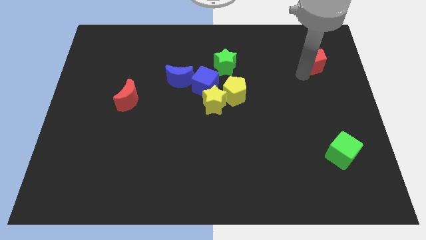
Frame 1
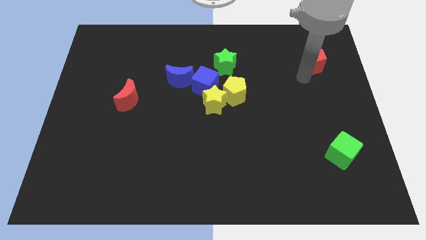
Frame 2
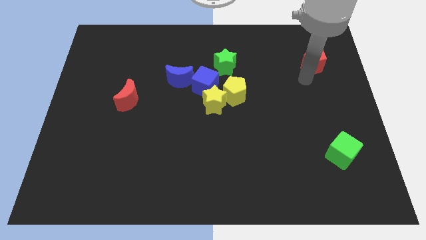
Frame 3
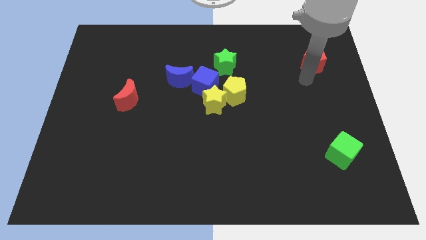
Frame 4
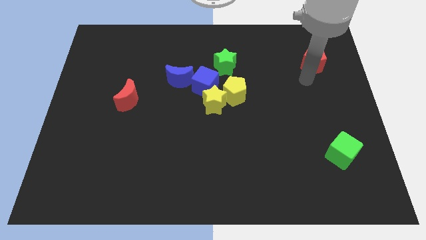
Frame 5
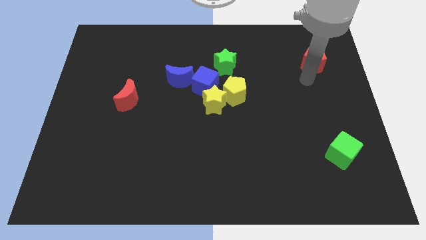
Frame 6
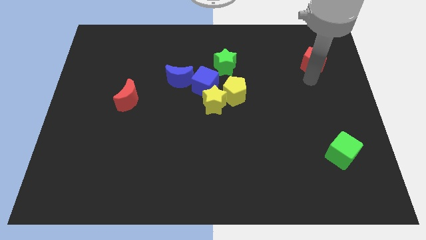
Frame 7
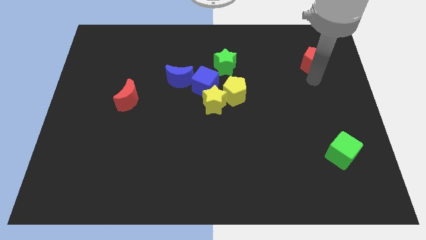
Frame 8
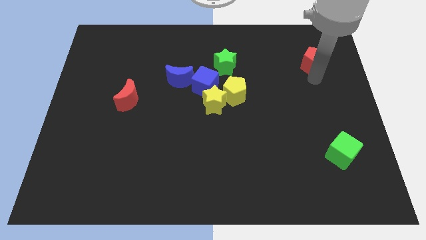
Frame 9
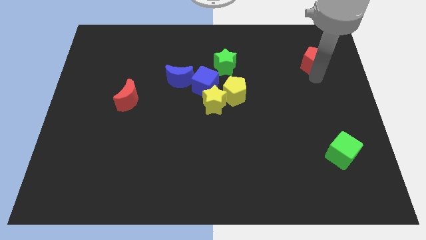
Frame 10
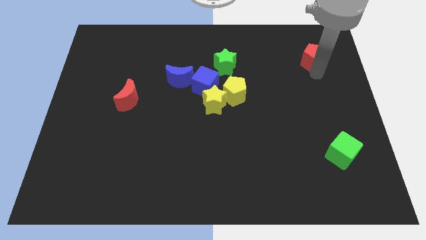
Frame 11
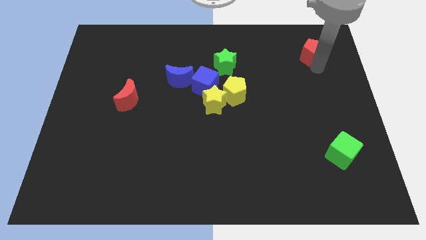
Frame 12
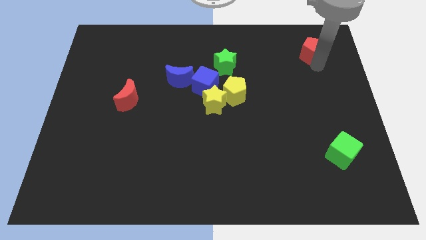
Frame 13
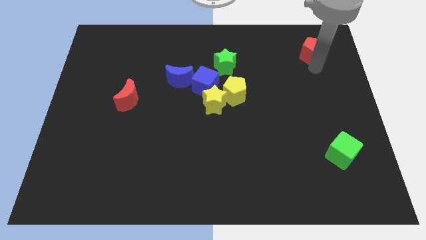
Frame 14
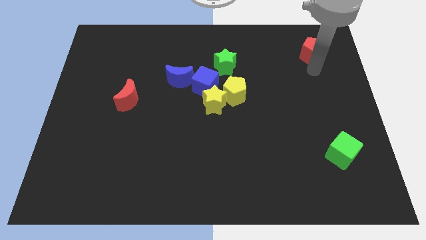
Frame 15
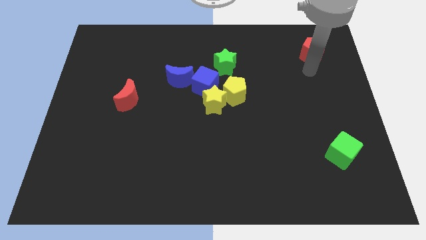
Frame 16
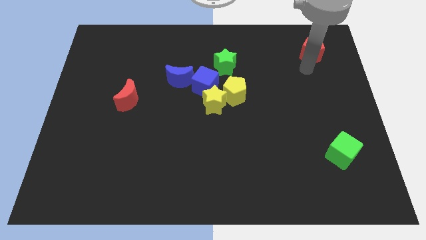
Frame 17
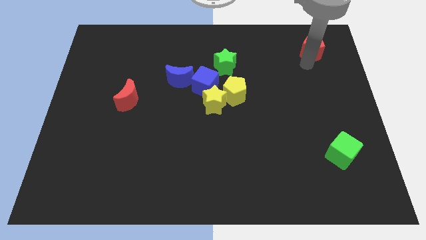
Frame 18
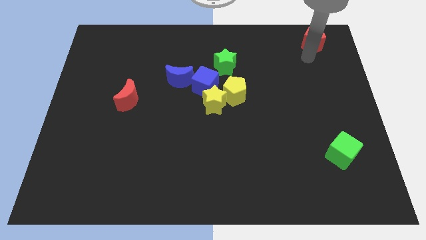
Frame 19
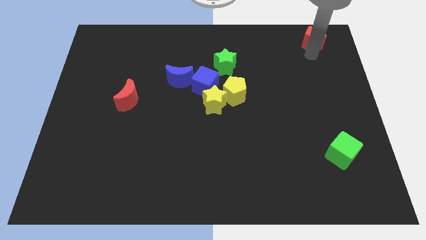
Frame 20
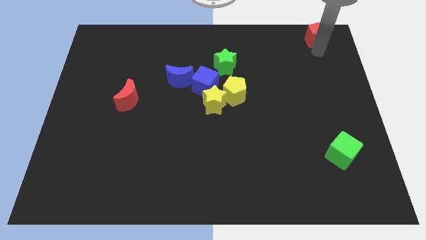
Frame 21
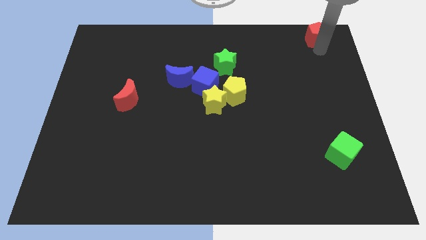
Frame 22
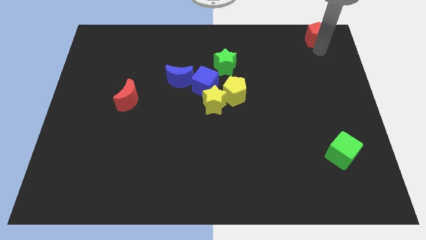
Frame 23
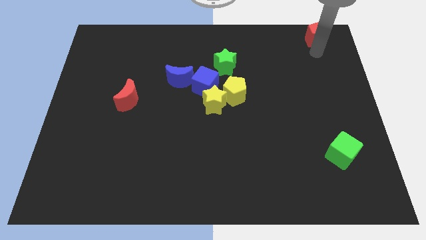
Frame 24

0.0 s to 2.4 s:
push the red pentagon to the top right of the board

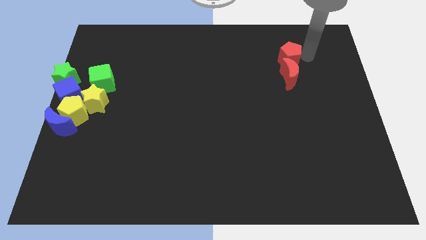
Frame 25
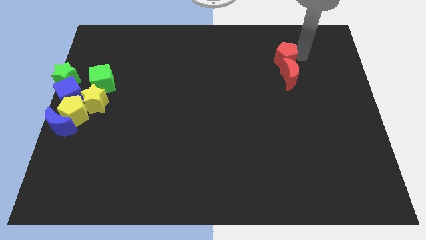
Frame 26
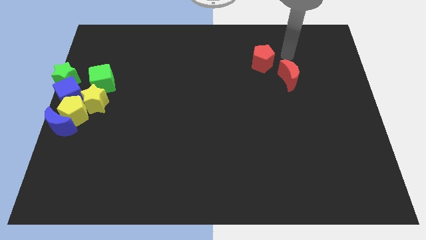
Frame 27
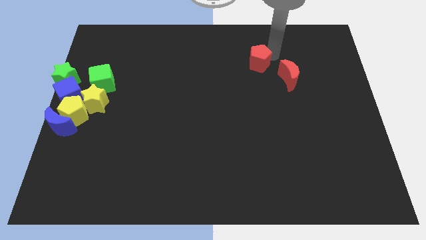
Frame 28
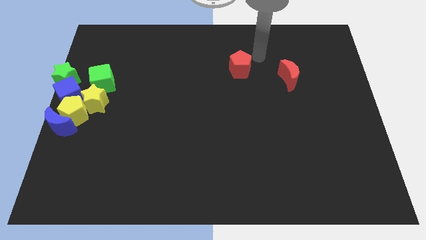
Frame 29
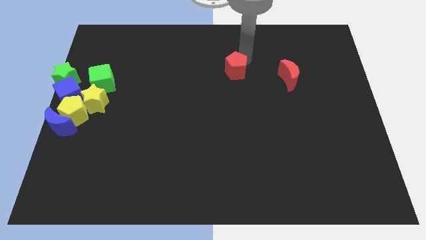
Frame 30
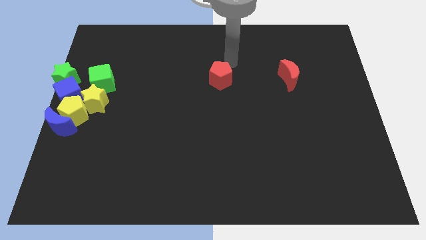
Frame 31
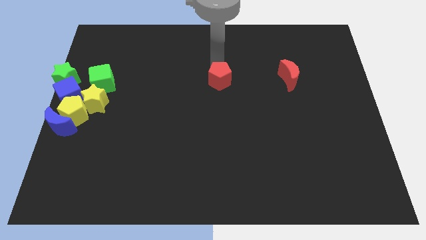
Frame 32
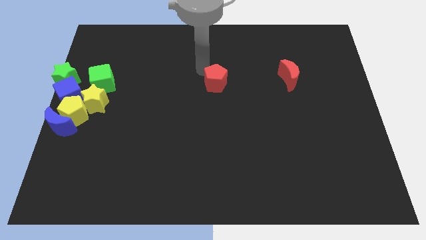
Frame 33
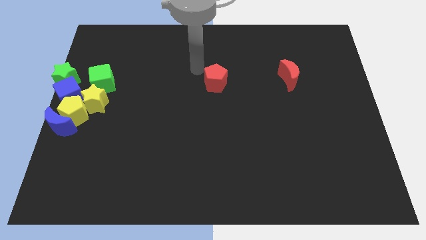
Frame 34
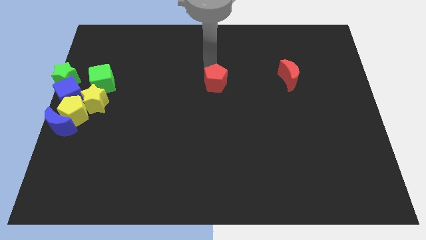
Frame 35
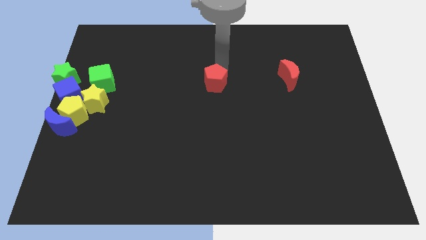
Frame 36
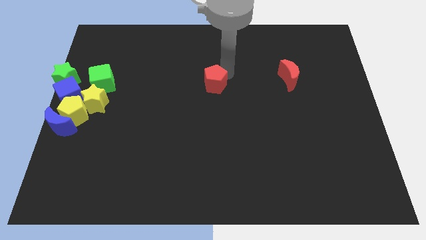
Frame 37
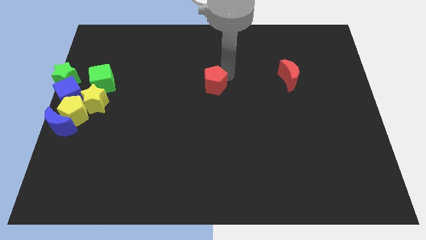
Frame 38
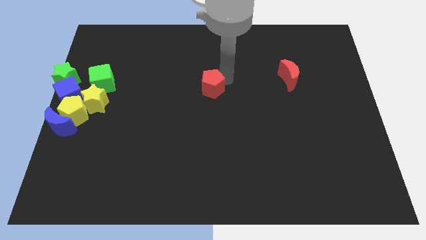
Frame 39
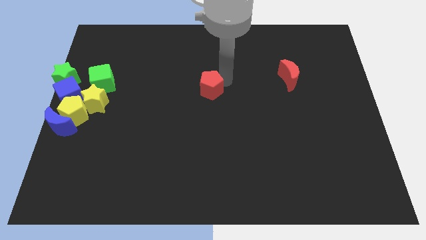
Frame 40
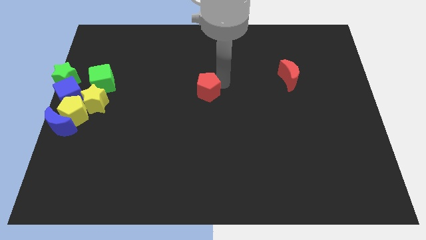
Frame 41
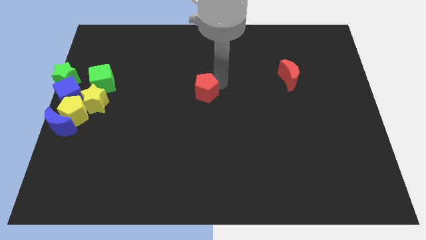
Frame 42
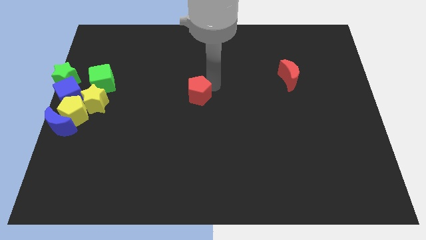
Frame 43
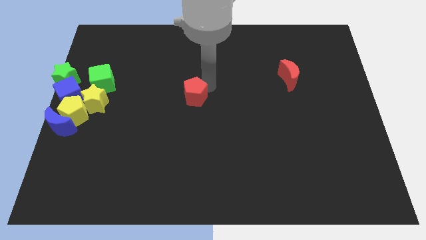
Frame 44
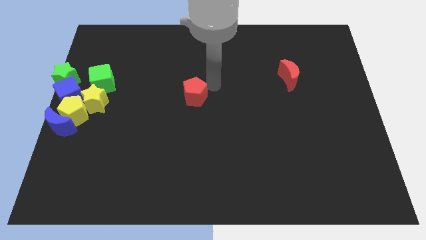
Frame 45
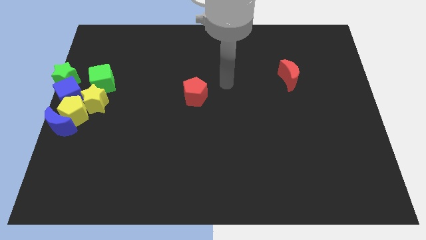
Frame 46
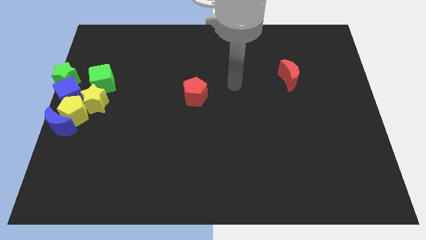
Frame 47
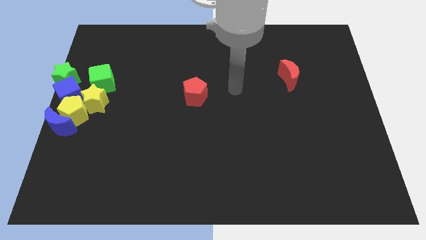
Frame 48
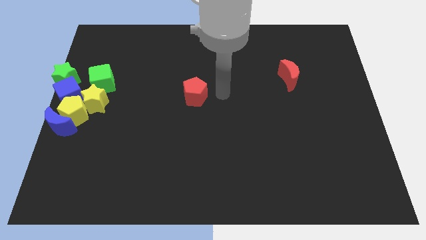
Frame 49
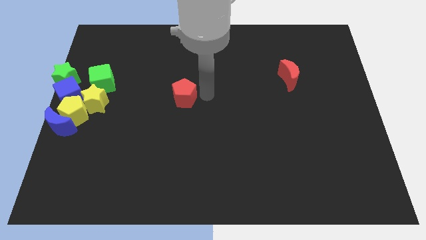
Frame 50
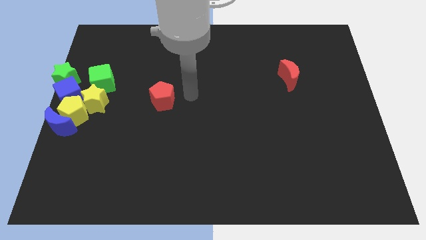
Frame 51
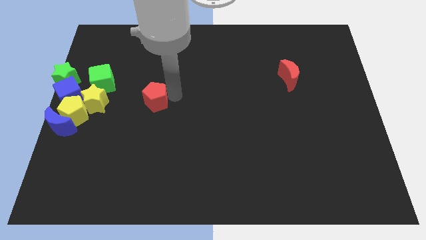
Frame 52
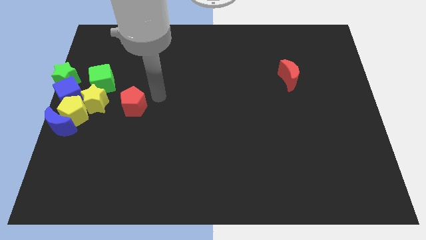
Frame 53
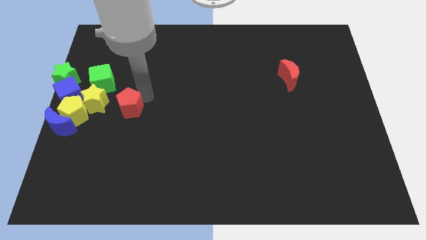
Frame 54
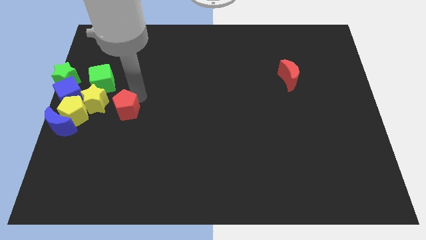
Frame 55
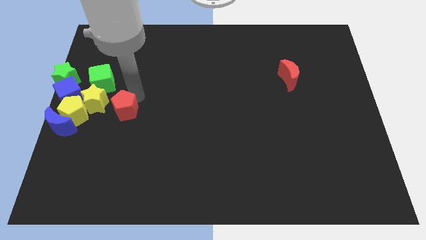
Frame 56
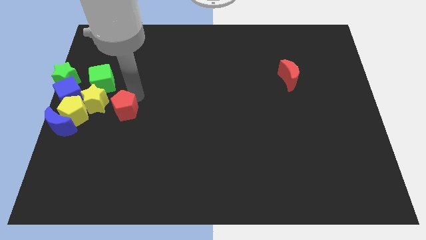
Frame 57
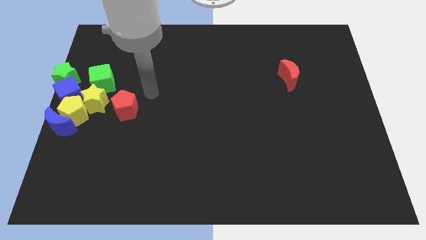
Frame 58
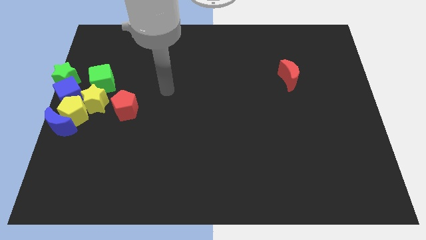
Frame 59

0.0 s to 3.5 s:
move the red pentagon to the right of yellow star

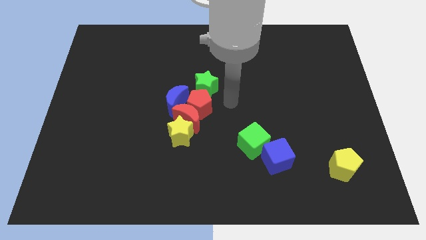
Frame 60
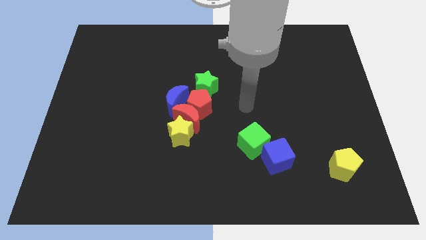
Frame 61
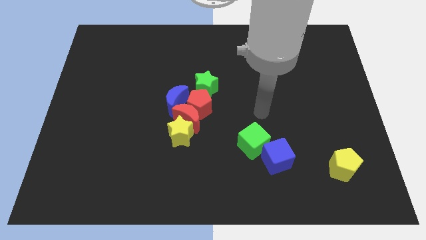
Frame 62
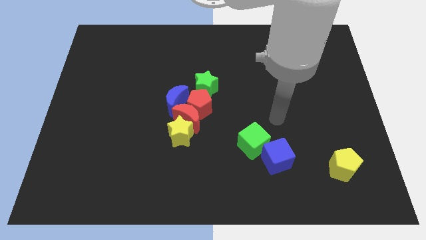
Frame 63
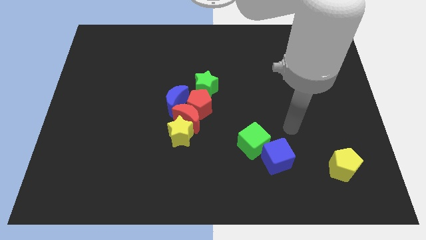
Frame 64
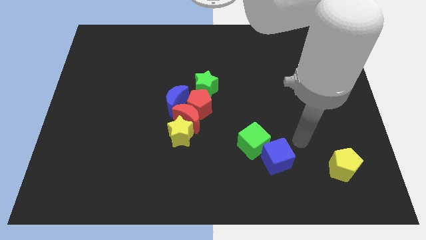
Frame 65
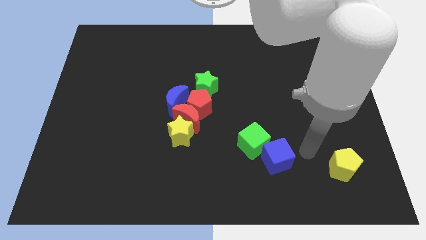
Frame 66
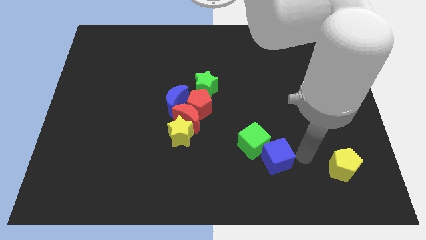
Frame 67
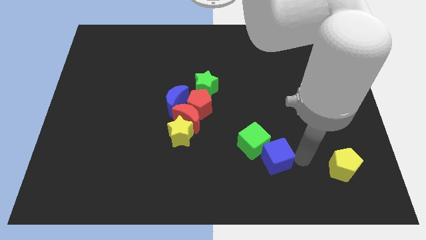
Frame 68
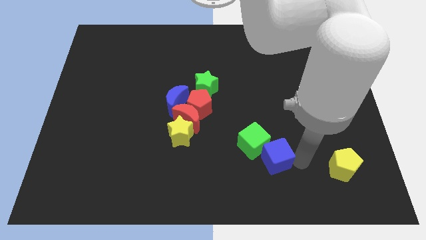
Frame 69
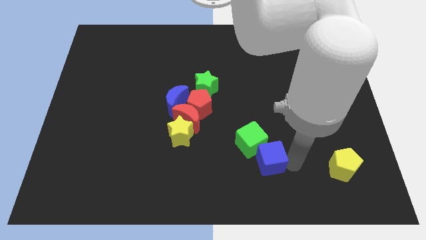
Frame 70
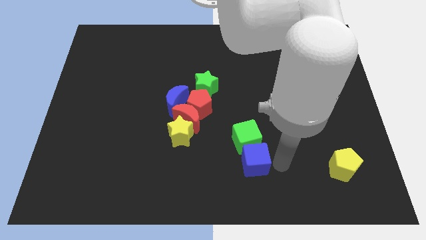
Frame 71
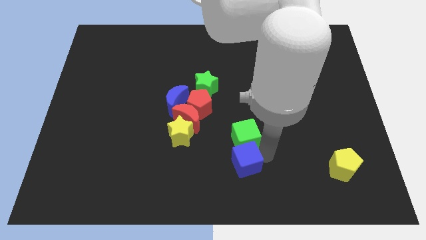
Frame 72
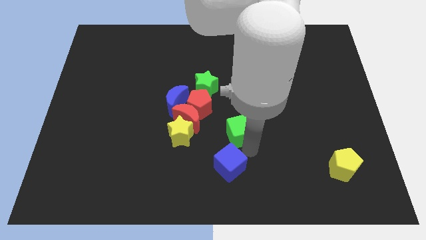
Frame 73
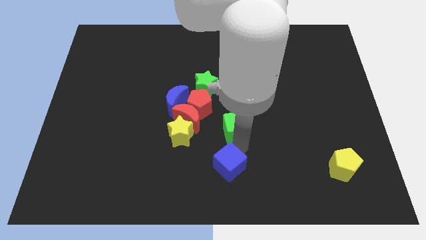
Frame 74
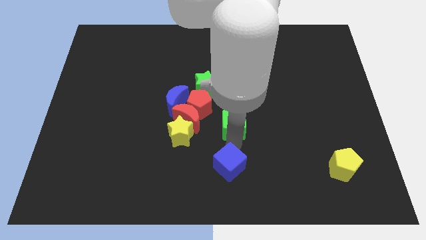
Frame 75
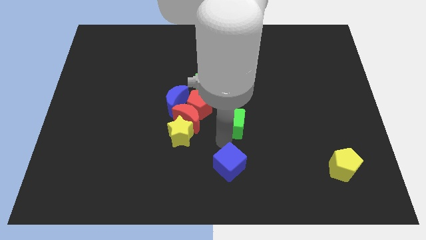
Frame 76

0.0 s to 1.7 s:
place your arm in between the green cube and blue cube

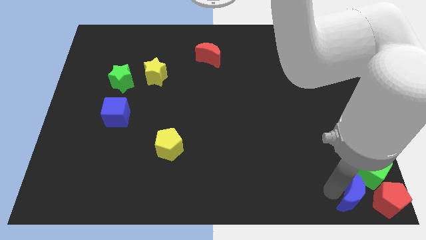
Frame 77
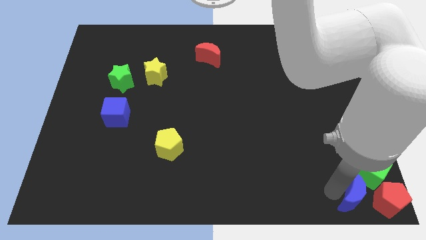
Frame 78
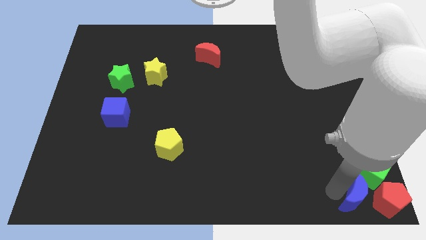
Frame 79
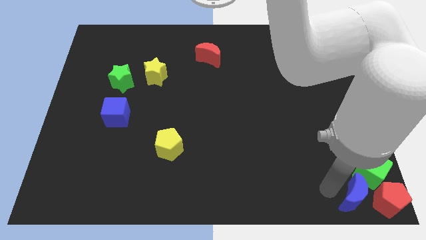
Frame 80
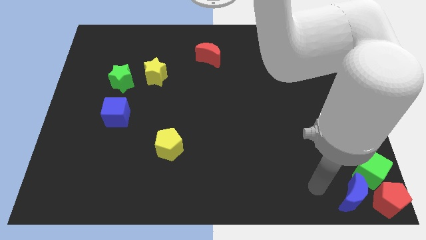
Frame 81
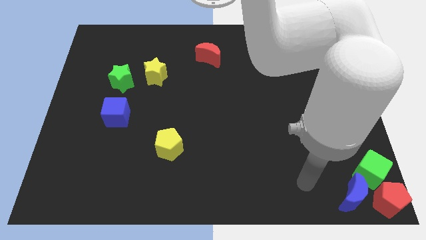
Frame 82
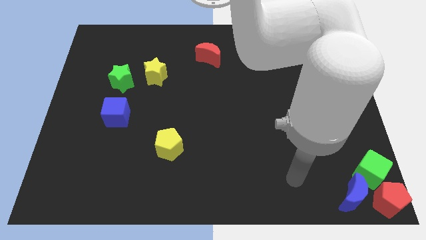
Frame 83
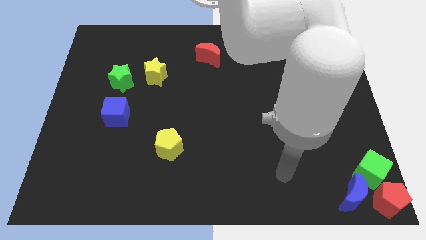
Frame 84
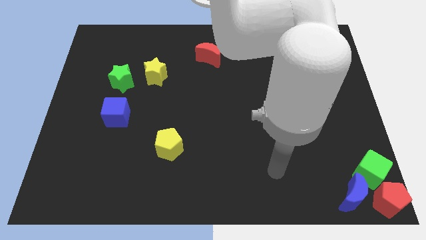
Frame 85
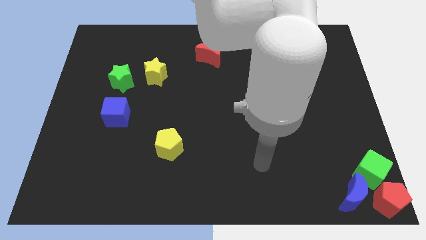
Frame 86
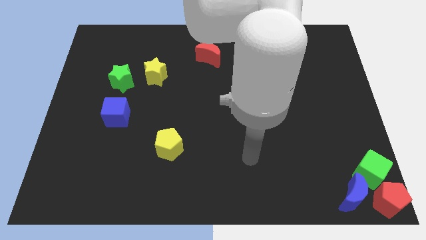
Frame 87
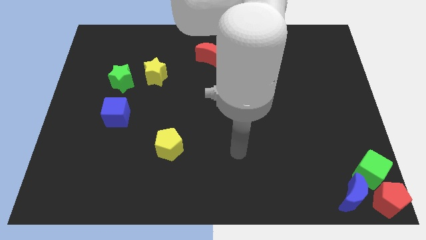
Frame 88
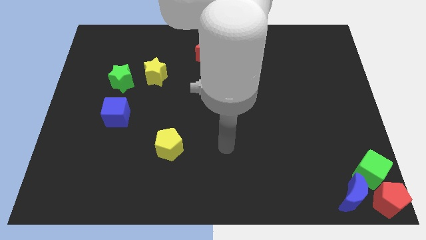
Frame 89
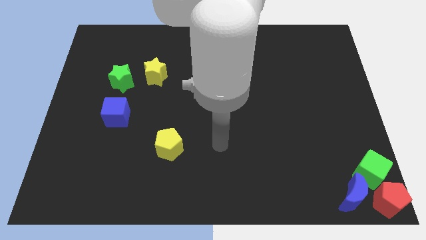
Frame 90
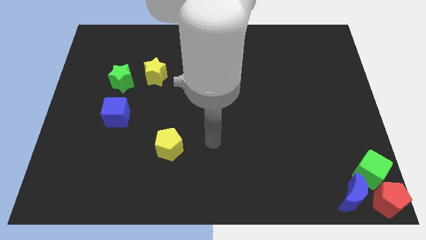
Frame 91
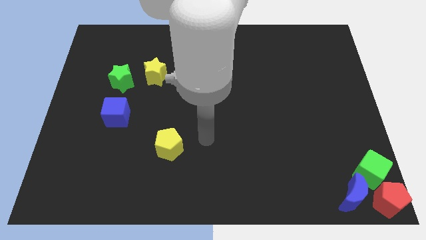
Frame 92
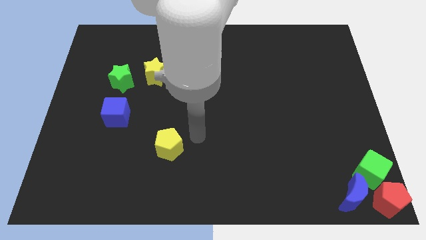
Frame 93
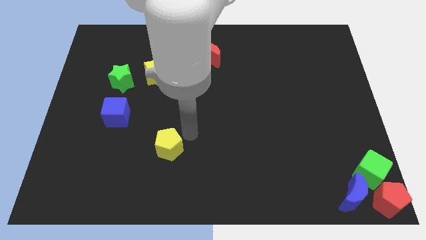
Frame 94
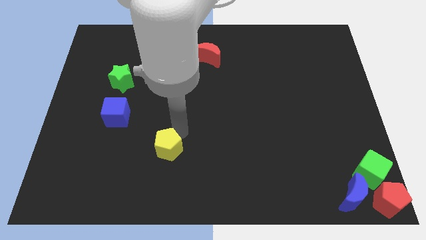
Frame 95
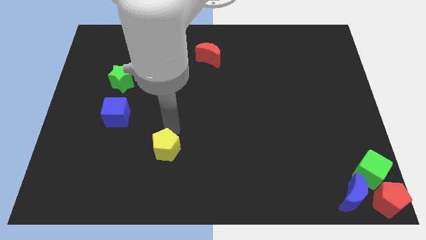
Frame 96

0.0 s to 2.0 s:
move your arm to the top of the yellow pentagon
